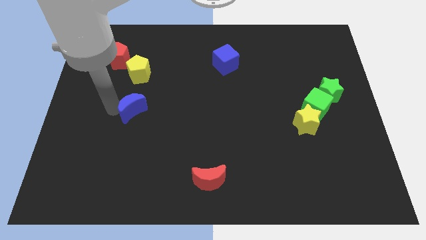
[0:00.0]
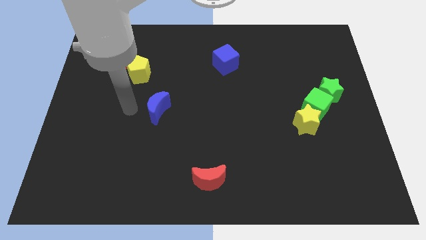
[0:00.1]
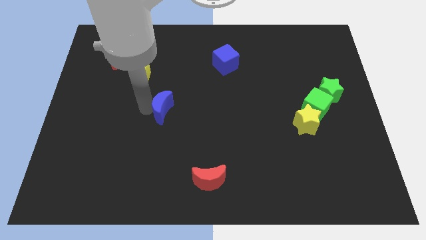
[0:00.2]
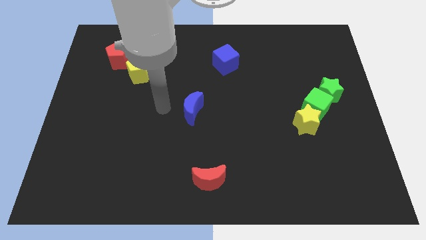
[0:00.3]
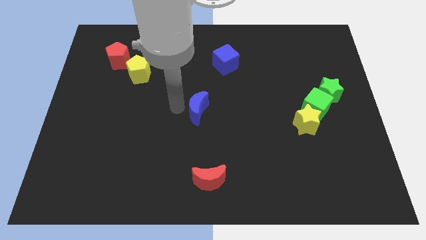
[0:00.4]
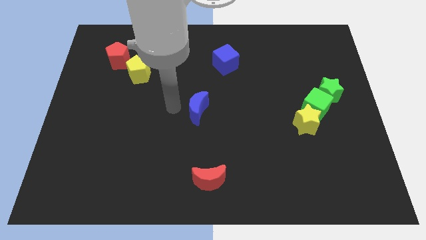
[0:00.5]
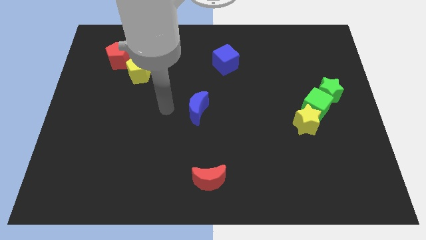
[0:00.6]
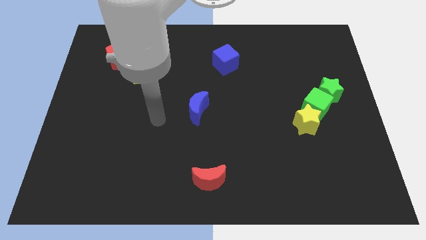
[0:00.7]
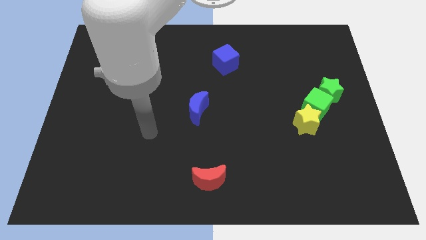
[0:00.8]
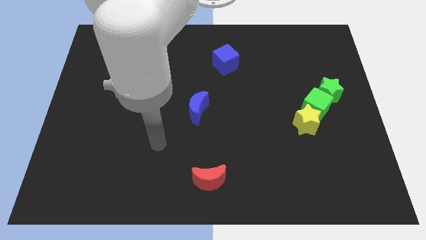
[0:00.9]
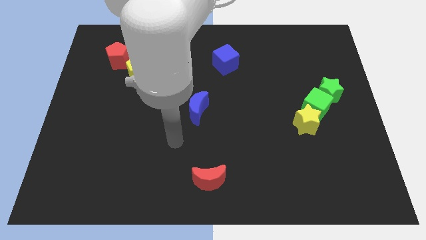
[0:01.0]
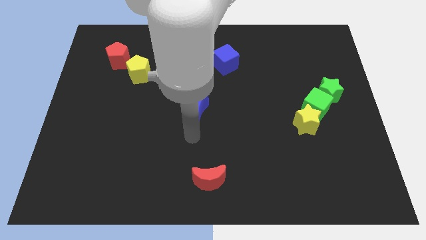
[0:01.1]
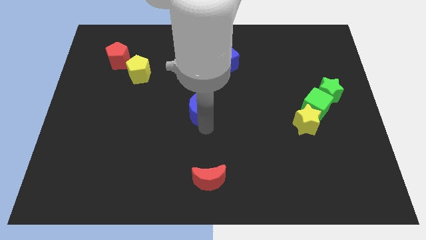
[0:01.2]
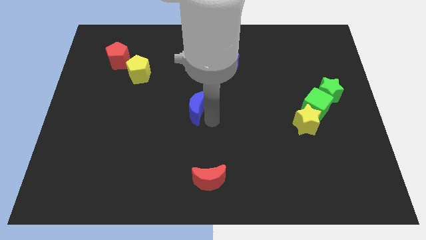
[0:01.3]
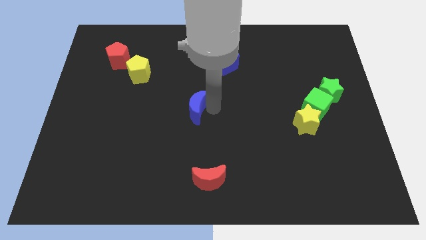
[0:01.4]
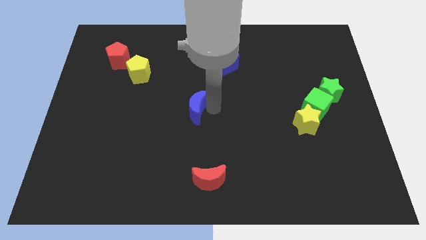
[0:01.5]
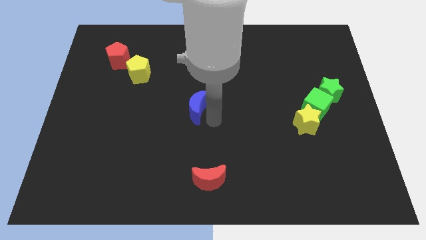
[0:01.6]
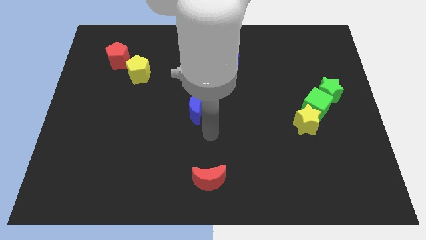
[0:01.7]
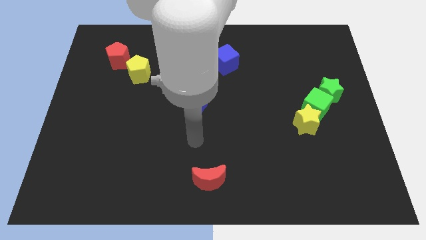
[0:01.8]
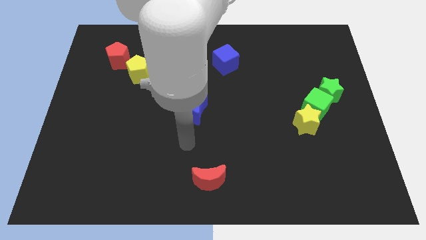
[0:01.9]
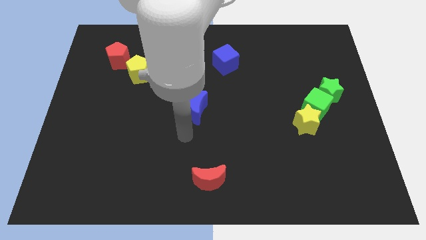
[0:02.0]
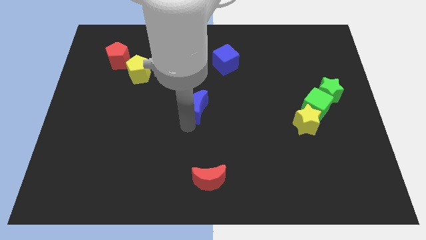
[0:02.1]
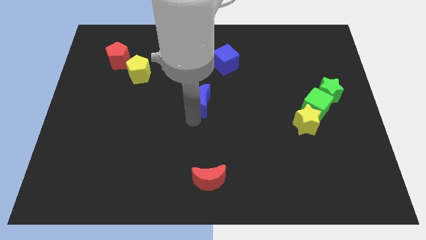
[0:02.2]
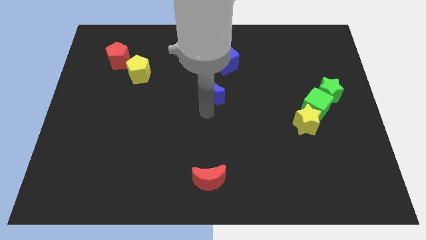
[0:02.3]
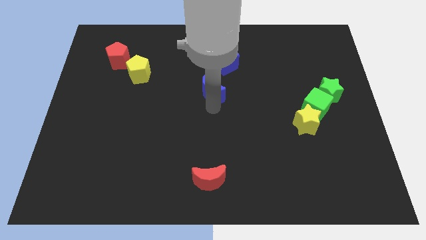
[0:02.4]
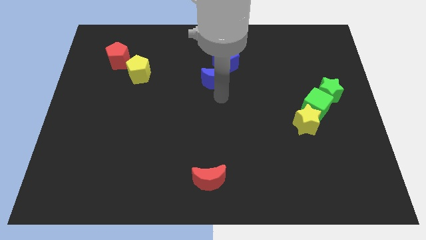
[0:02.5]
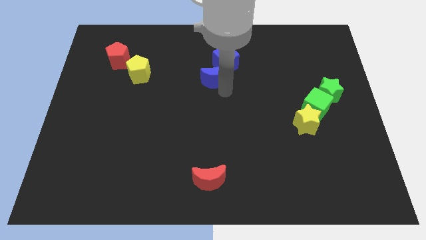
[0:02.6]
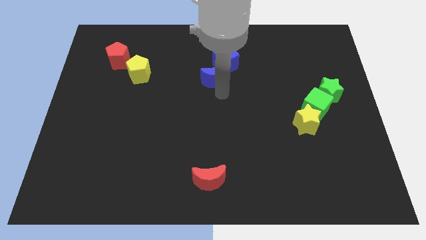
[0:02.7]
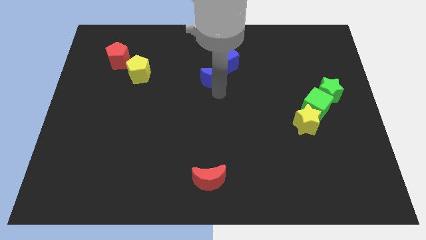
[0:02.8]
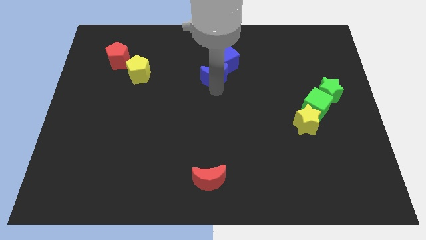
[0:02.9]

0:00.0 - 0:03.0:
move blue moon into blue cube

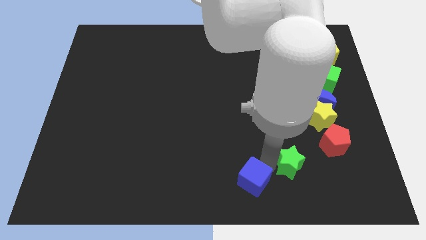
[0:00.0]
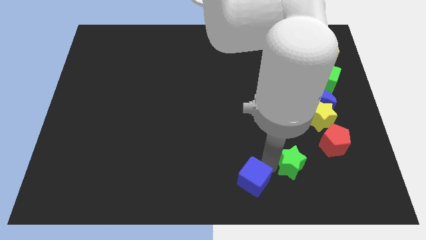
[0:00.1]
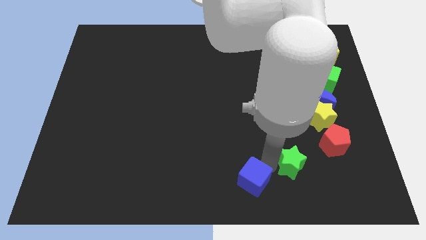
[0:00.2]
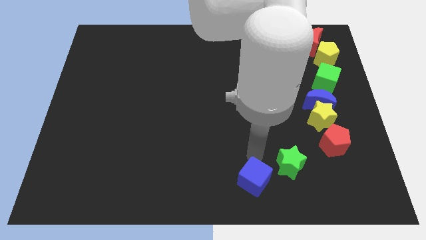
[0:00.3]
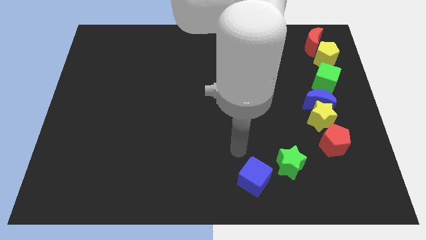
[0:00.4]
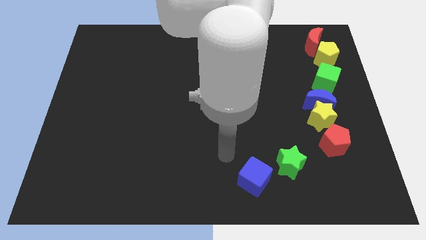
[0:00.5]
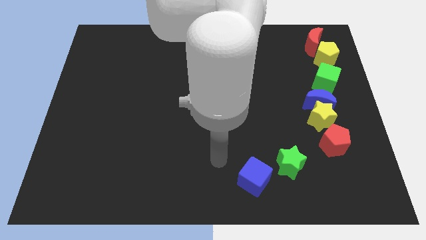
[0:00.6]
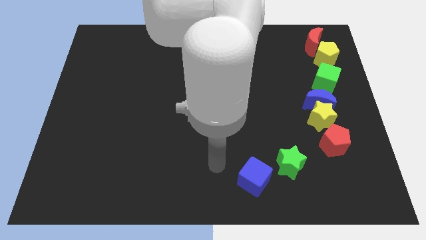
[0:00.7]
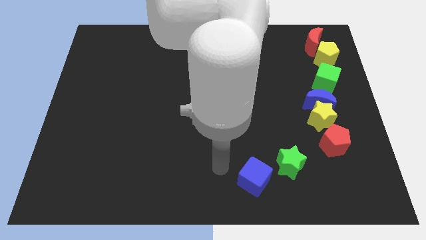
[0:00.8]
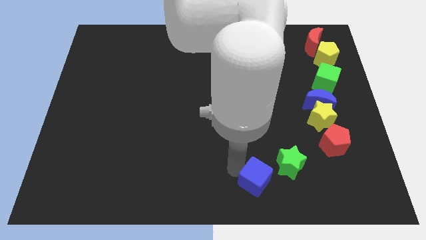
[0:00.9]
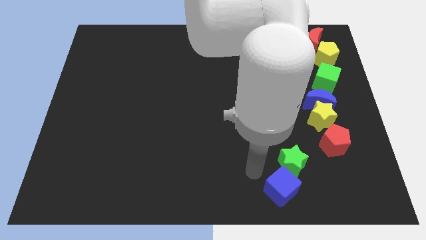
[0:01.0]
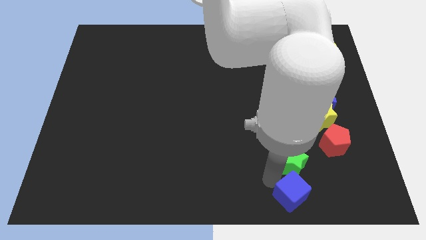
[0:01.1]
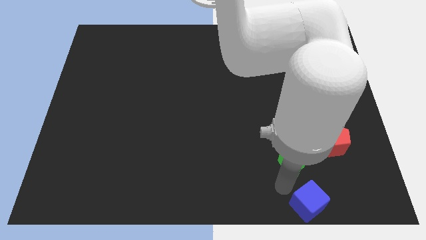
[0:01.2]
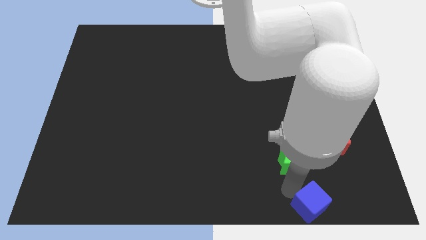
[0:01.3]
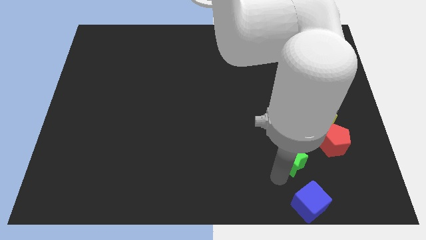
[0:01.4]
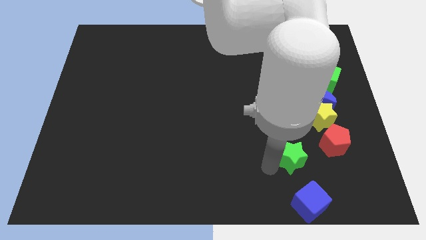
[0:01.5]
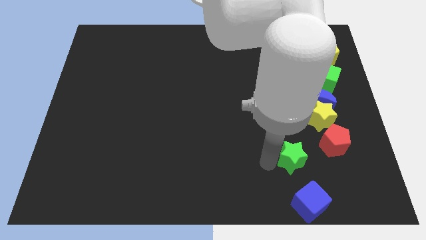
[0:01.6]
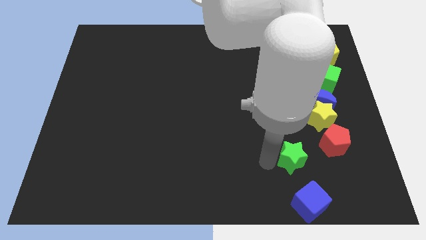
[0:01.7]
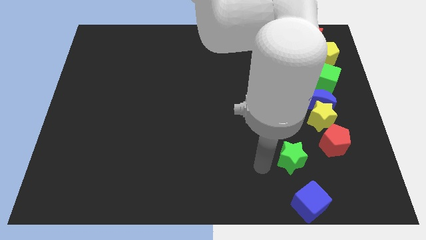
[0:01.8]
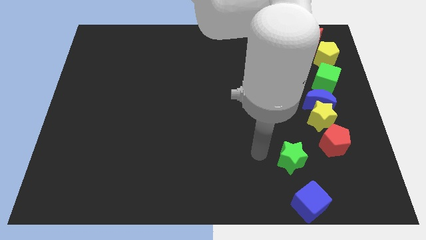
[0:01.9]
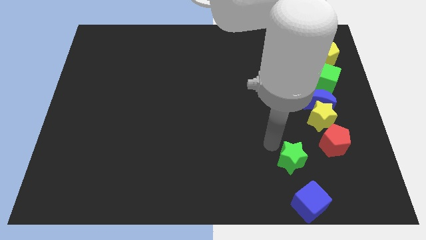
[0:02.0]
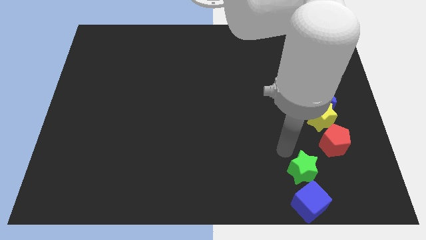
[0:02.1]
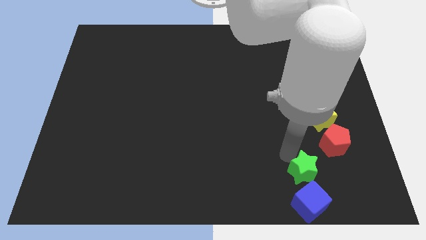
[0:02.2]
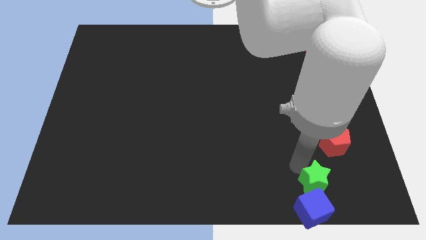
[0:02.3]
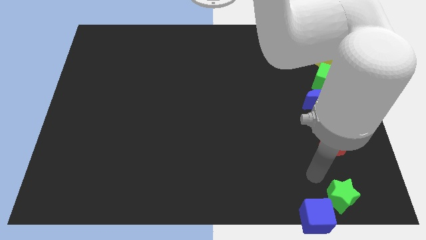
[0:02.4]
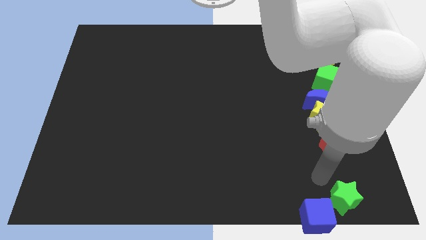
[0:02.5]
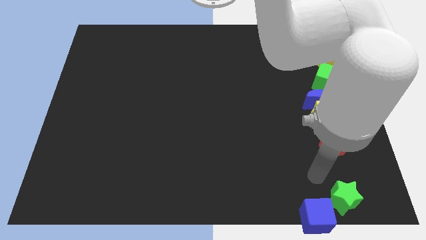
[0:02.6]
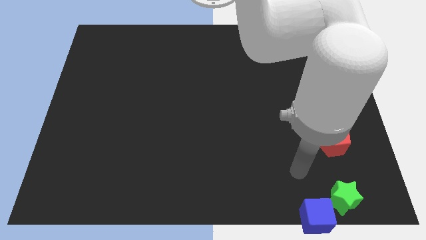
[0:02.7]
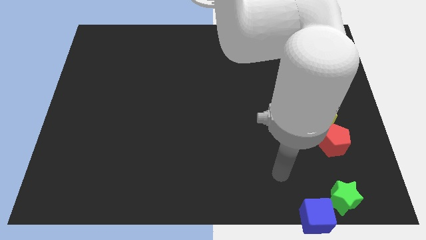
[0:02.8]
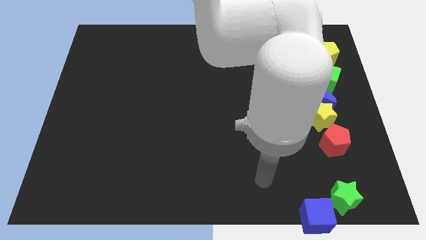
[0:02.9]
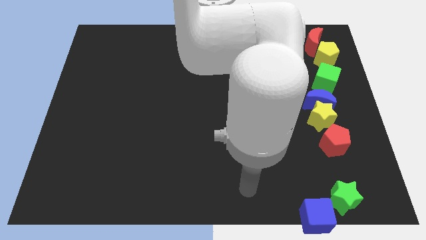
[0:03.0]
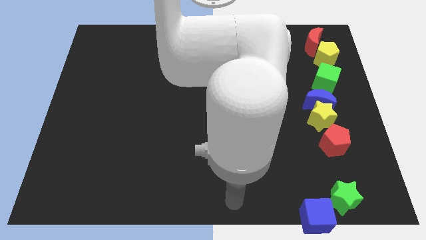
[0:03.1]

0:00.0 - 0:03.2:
push the blue cube and green star to the bottom right side

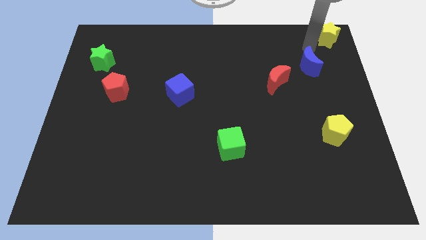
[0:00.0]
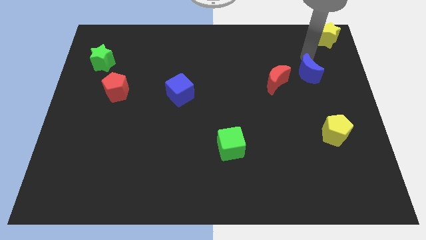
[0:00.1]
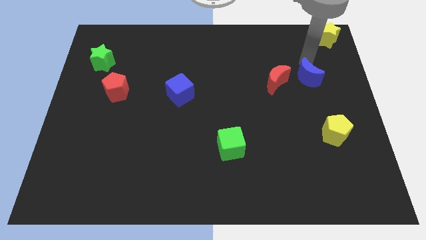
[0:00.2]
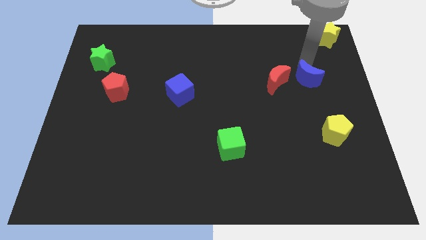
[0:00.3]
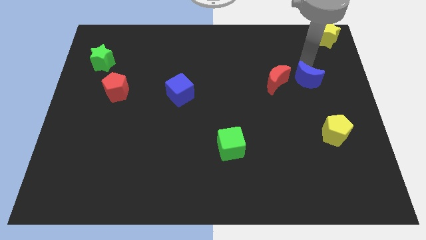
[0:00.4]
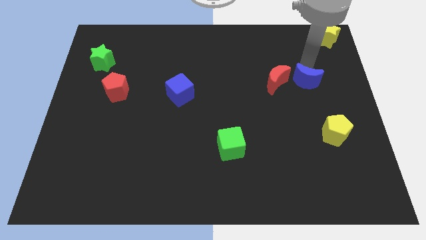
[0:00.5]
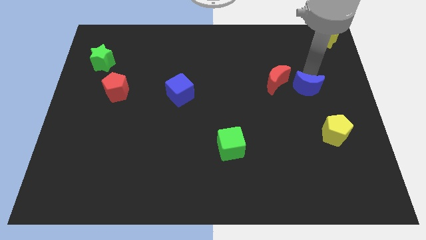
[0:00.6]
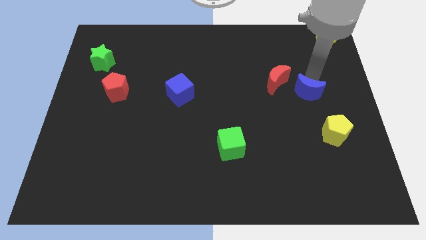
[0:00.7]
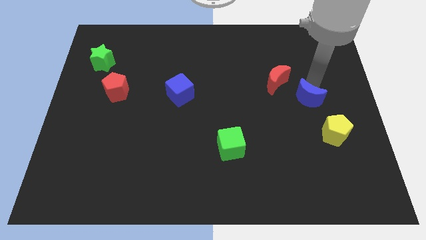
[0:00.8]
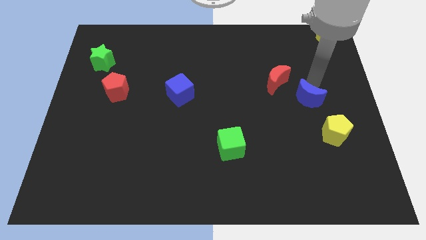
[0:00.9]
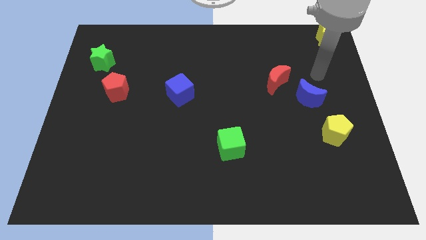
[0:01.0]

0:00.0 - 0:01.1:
move the blue crescent to the bottom right of the red crescent

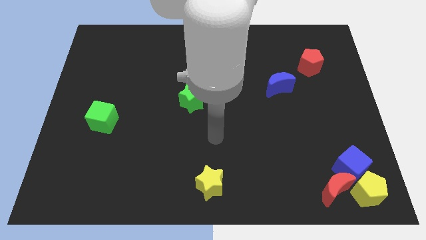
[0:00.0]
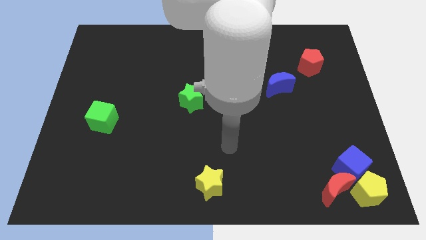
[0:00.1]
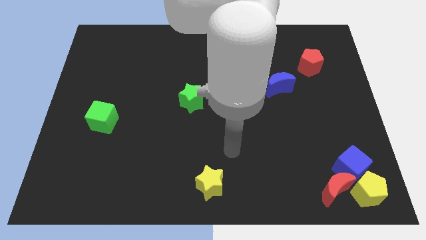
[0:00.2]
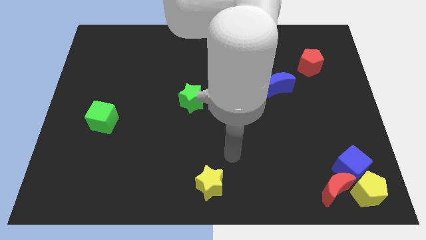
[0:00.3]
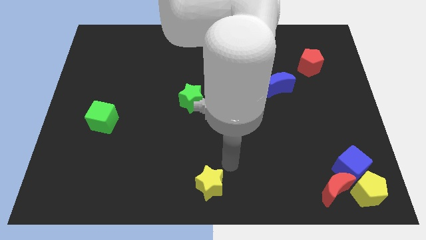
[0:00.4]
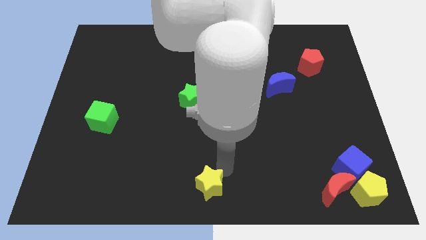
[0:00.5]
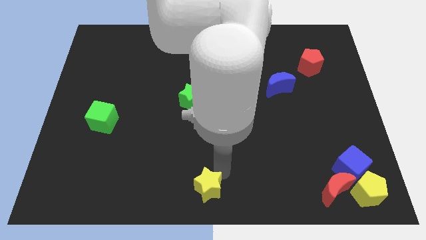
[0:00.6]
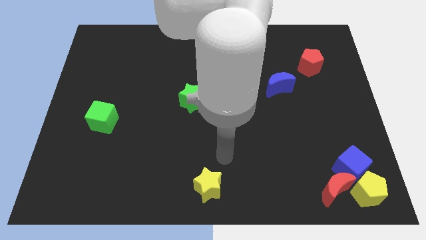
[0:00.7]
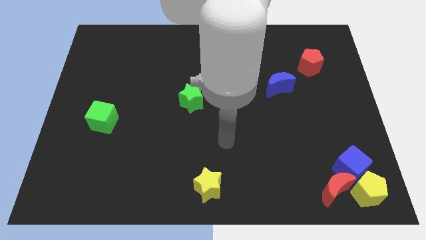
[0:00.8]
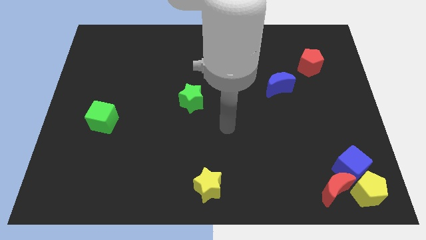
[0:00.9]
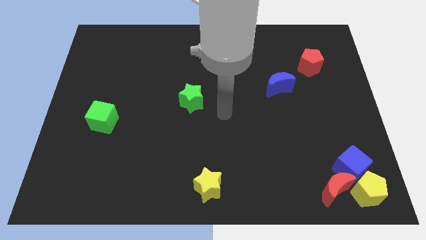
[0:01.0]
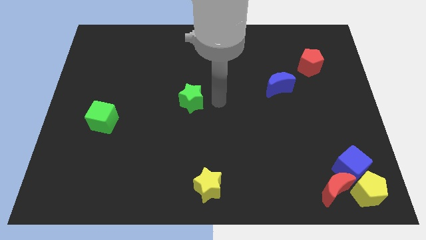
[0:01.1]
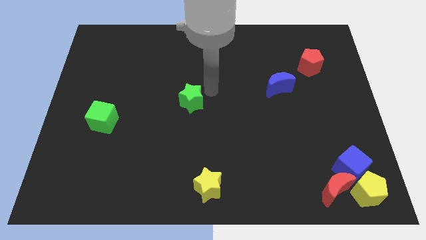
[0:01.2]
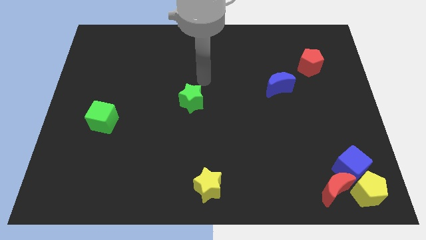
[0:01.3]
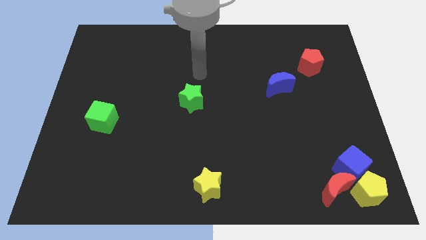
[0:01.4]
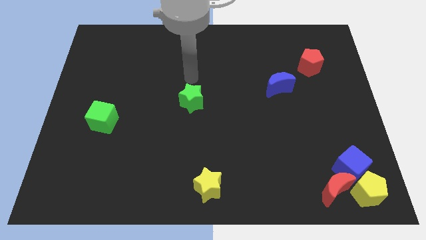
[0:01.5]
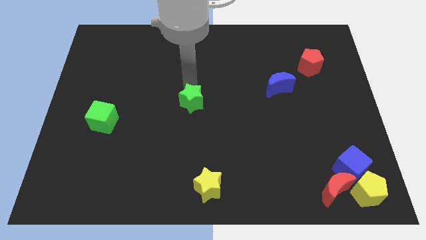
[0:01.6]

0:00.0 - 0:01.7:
touch the top side of the green star
